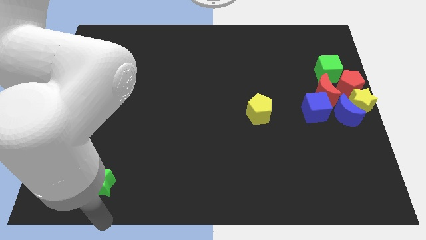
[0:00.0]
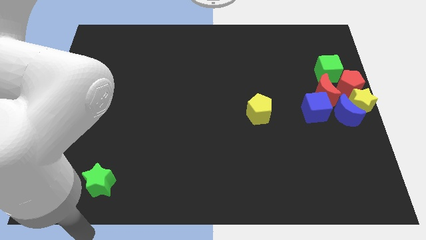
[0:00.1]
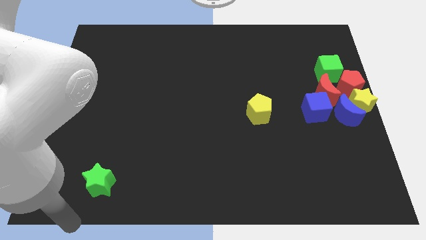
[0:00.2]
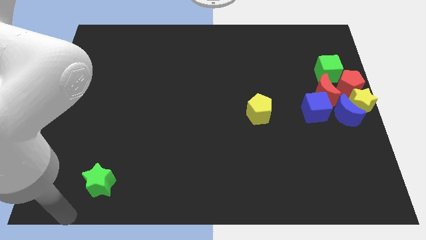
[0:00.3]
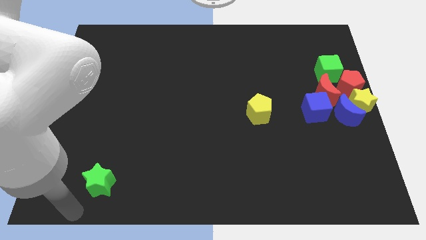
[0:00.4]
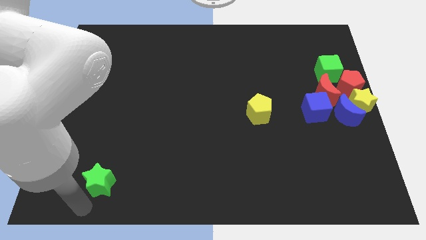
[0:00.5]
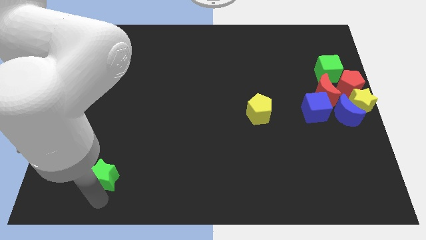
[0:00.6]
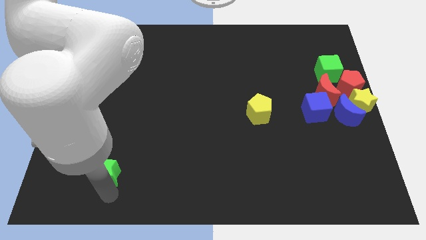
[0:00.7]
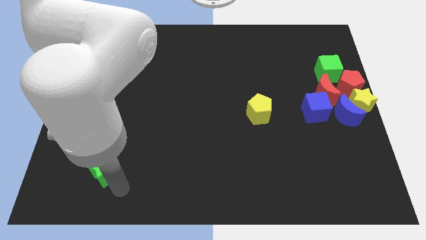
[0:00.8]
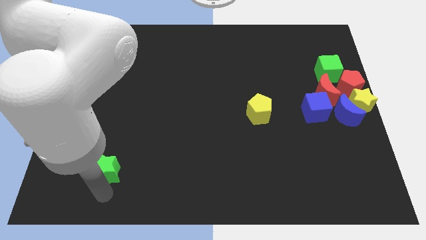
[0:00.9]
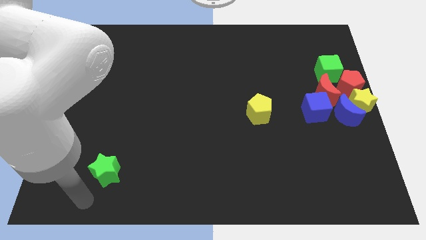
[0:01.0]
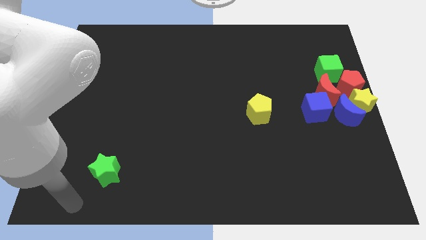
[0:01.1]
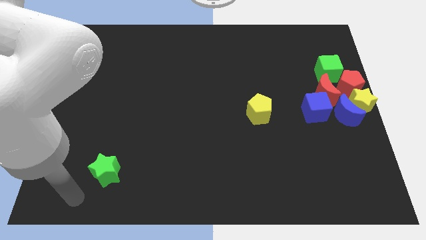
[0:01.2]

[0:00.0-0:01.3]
move green star slightly up

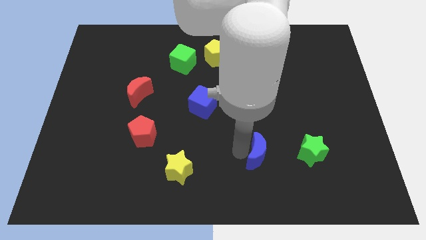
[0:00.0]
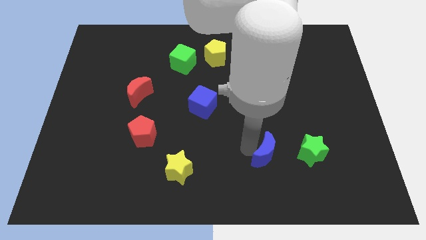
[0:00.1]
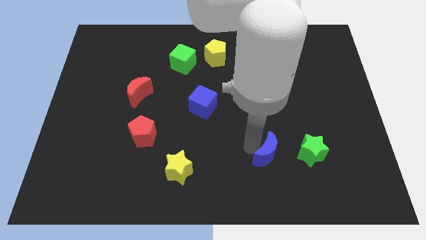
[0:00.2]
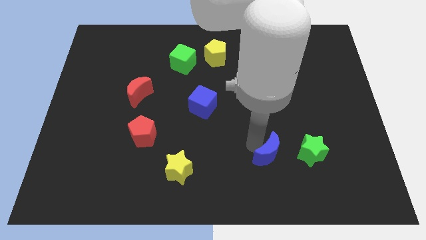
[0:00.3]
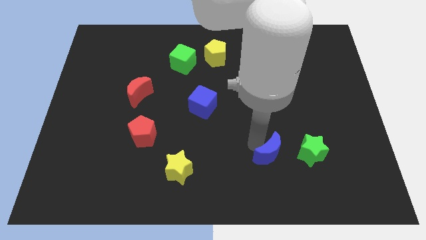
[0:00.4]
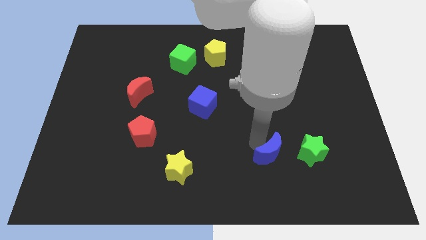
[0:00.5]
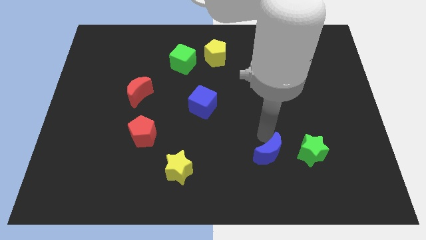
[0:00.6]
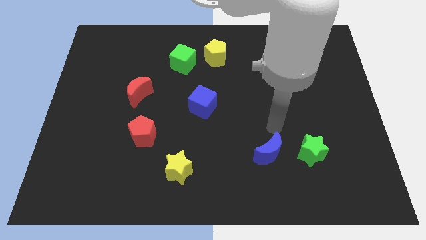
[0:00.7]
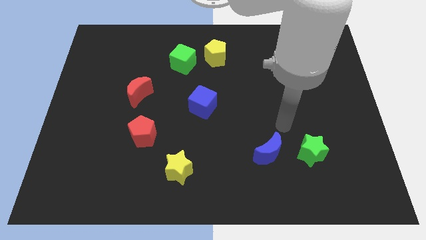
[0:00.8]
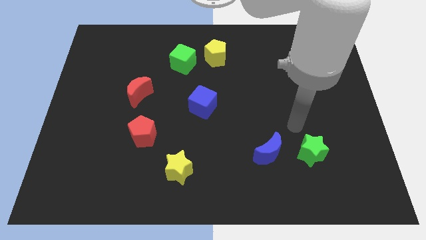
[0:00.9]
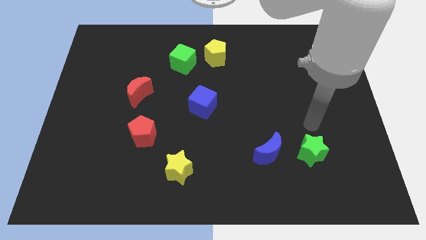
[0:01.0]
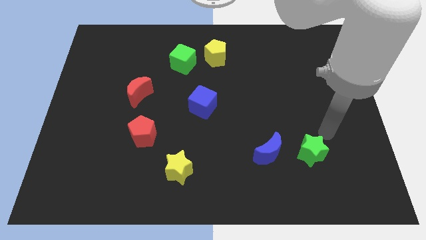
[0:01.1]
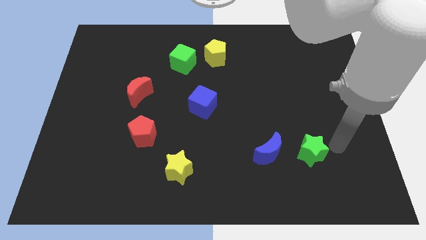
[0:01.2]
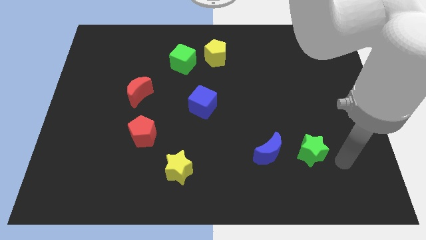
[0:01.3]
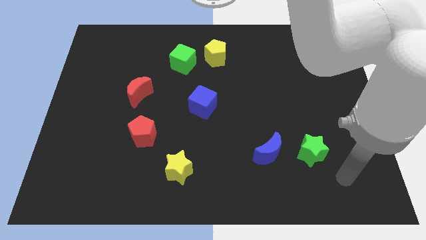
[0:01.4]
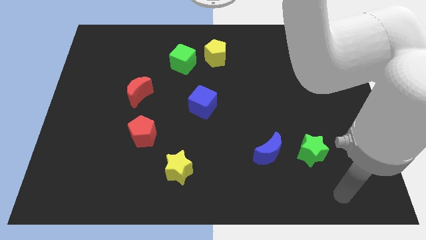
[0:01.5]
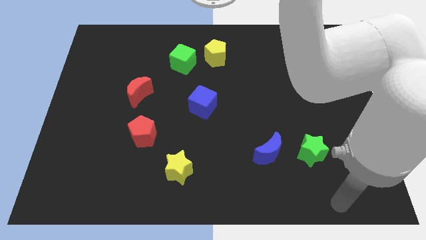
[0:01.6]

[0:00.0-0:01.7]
place the blue crescent towards the left side of the green star

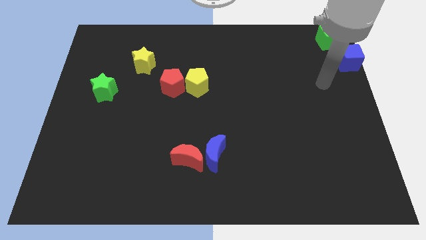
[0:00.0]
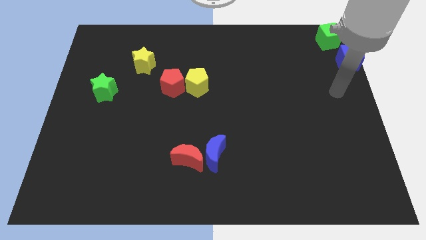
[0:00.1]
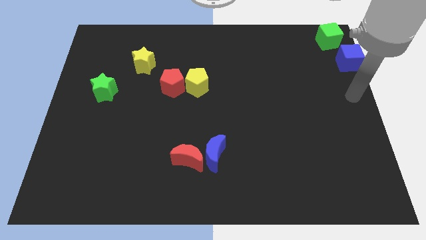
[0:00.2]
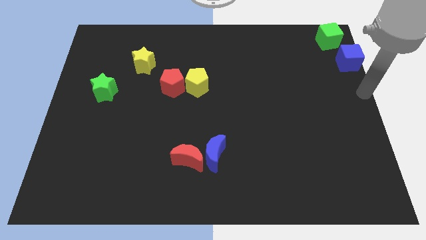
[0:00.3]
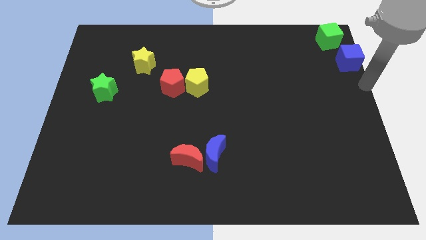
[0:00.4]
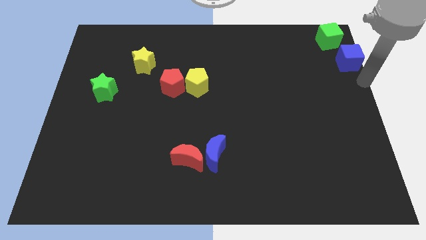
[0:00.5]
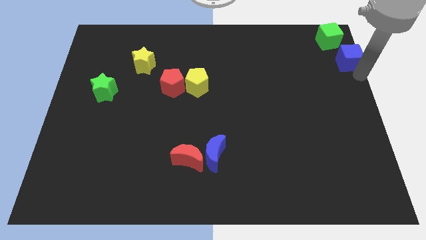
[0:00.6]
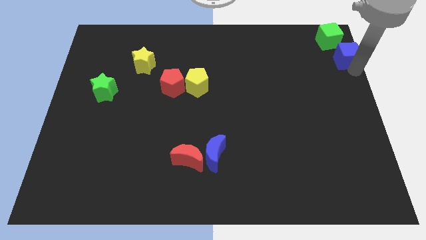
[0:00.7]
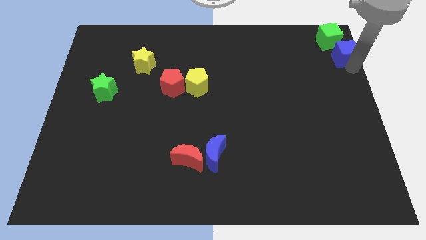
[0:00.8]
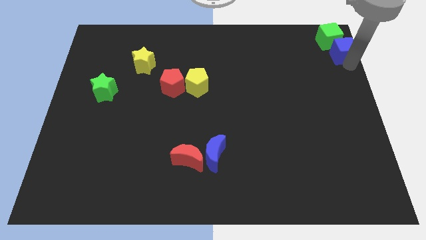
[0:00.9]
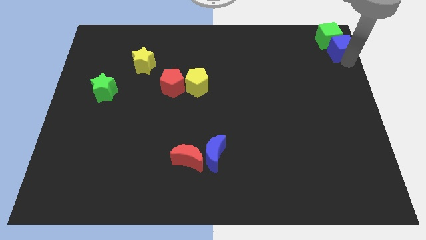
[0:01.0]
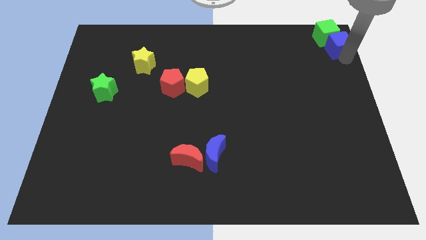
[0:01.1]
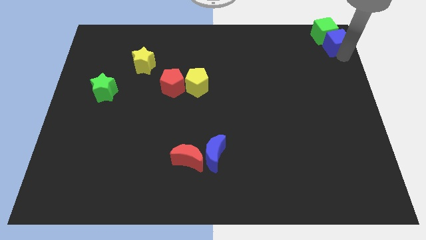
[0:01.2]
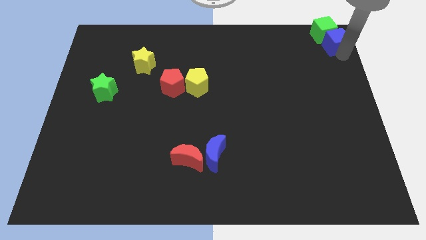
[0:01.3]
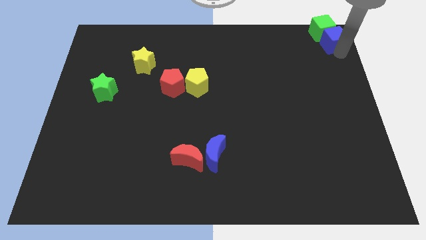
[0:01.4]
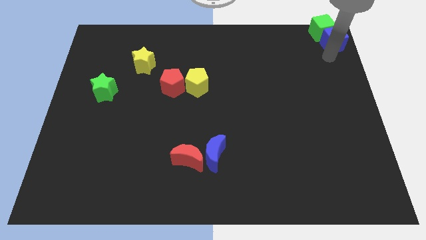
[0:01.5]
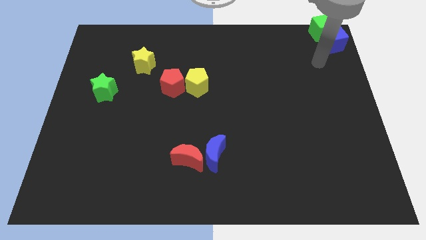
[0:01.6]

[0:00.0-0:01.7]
push the blue cube into the green cube

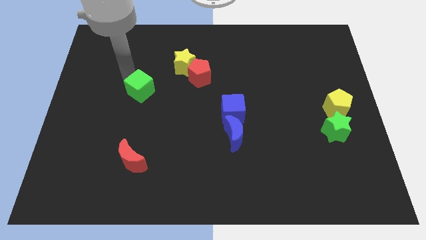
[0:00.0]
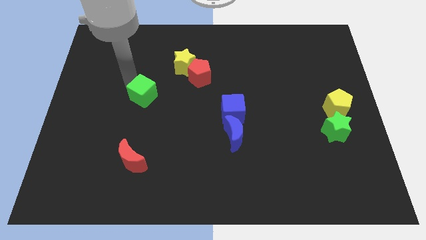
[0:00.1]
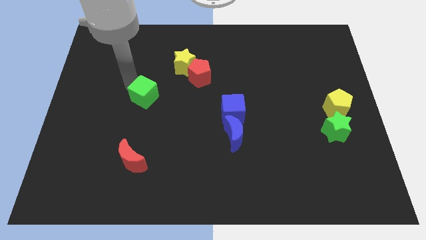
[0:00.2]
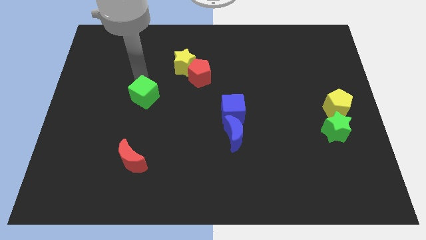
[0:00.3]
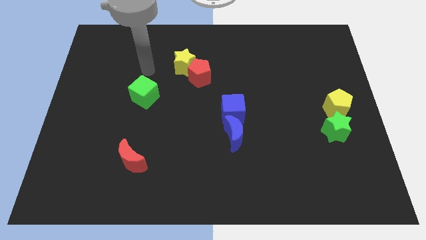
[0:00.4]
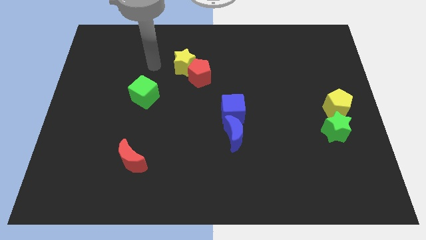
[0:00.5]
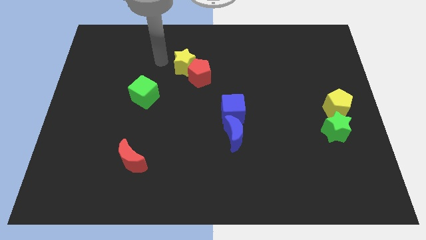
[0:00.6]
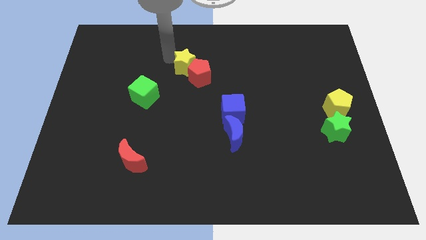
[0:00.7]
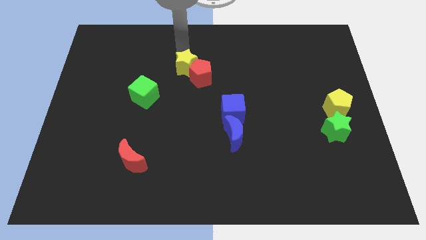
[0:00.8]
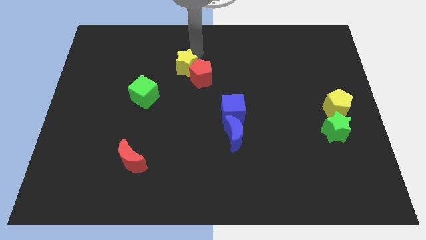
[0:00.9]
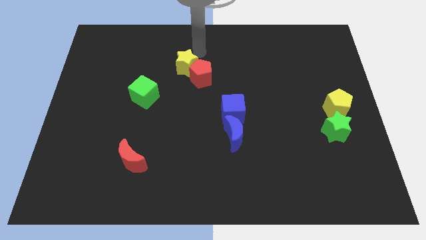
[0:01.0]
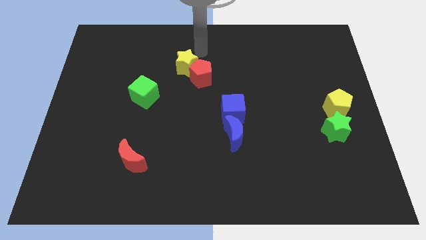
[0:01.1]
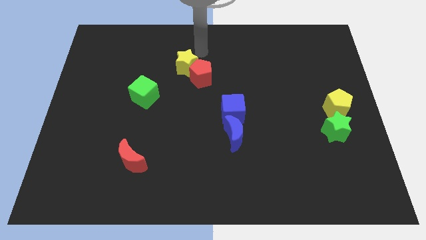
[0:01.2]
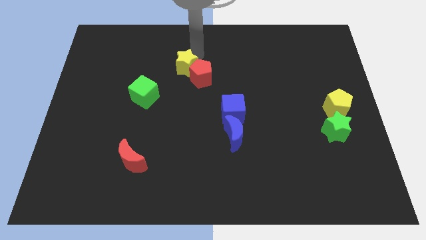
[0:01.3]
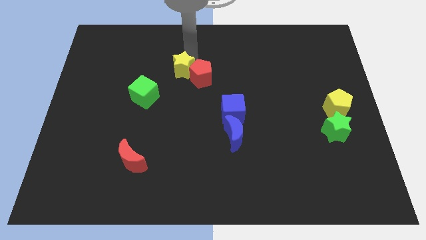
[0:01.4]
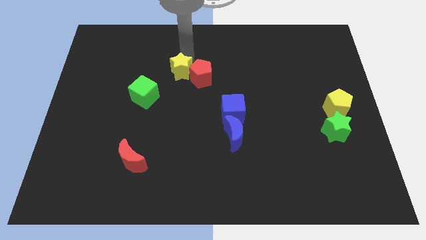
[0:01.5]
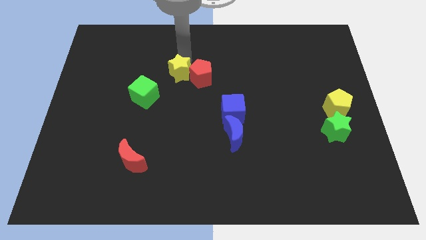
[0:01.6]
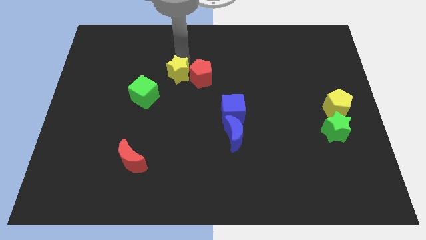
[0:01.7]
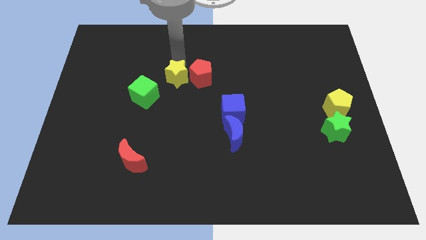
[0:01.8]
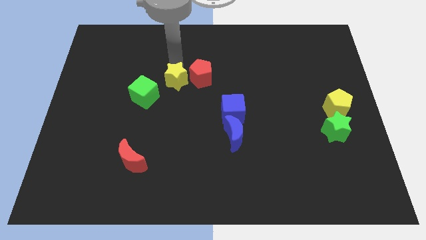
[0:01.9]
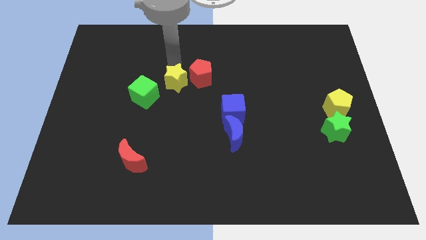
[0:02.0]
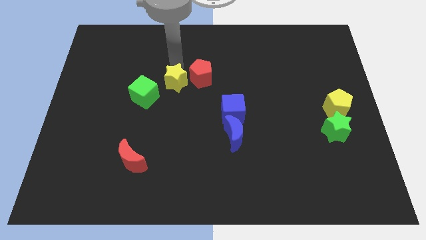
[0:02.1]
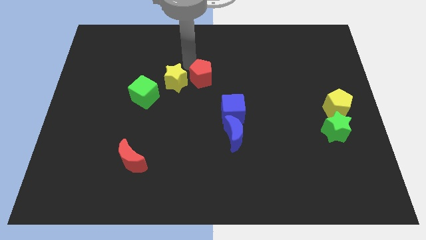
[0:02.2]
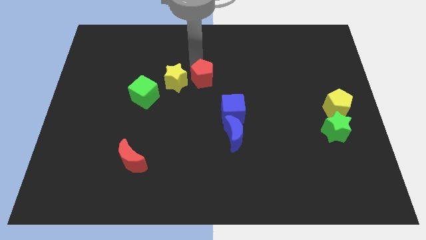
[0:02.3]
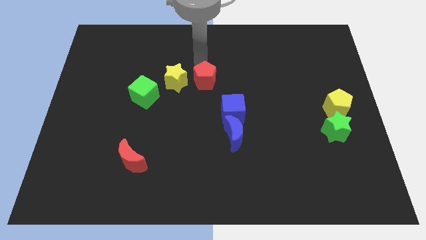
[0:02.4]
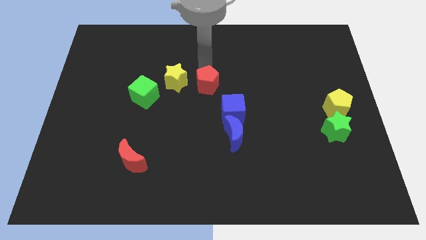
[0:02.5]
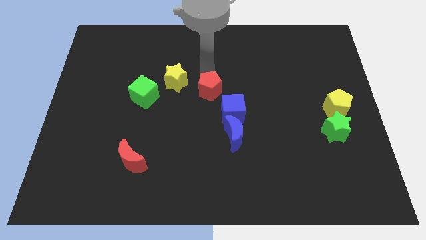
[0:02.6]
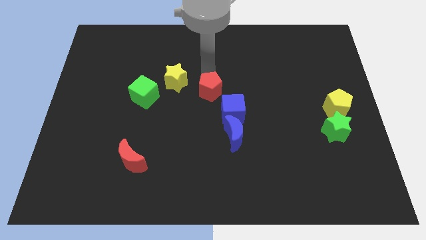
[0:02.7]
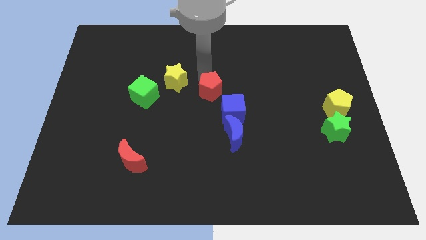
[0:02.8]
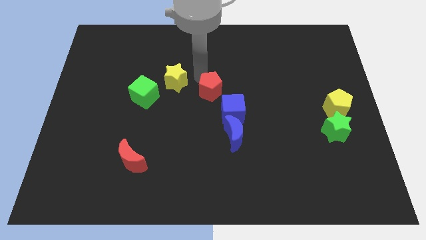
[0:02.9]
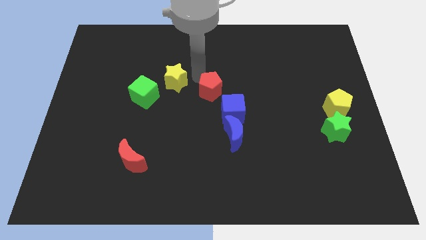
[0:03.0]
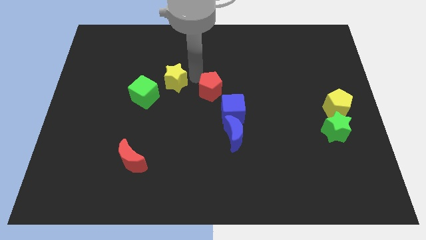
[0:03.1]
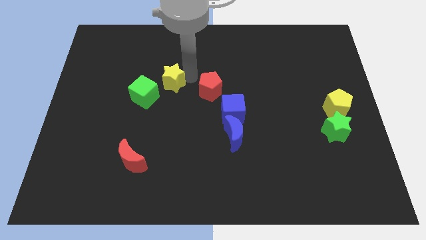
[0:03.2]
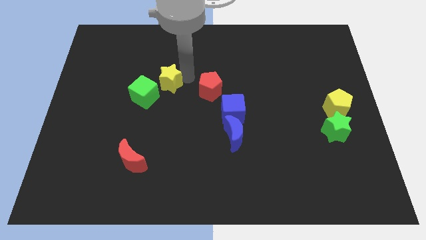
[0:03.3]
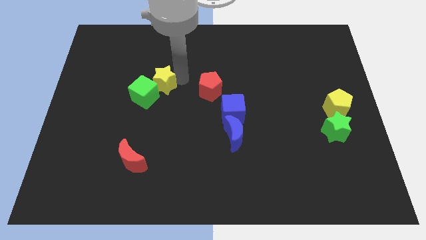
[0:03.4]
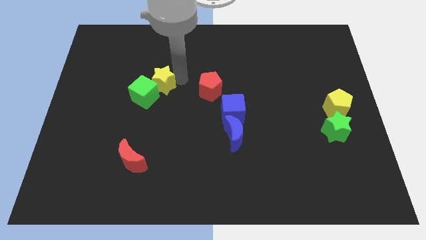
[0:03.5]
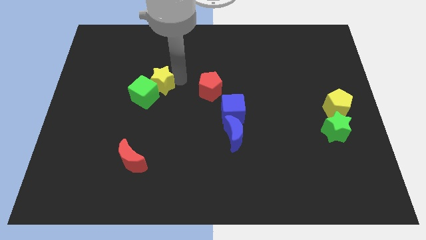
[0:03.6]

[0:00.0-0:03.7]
push yellow star towards the green cube

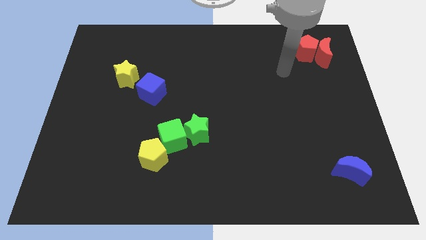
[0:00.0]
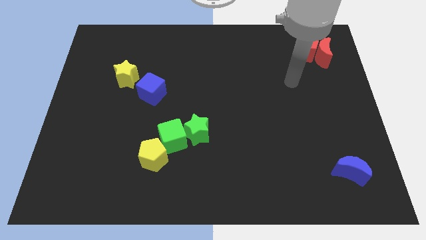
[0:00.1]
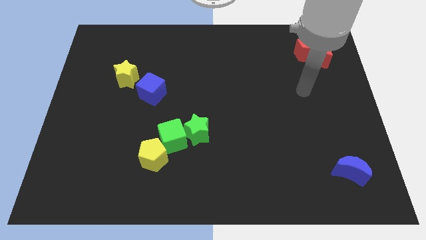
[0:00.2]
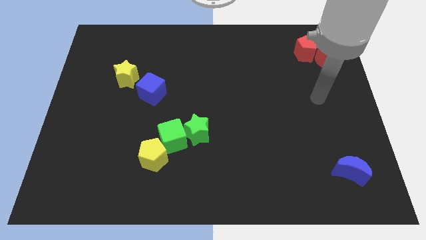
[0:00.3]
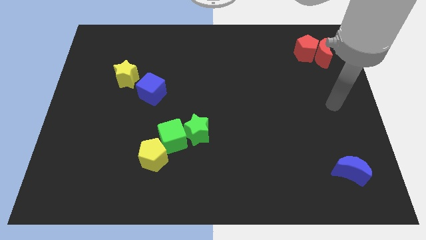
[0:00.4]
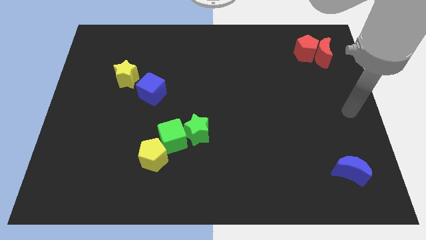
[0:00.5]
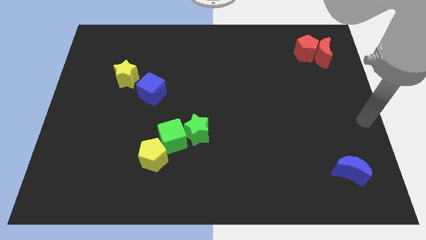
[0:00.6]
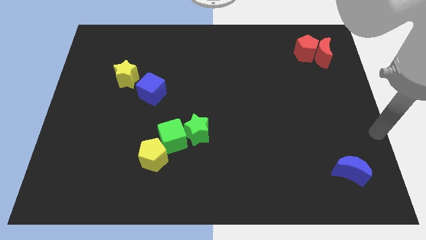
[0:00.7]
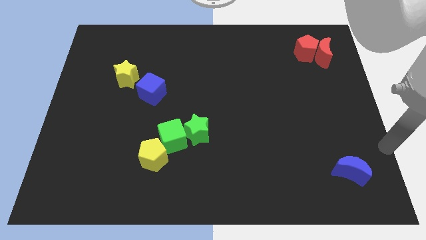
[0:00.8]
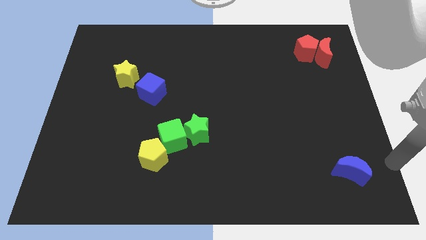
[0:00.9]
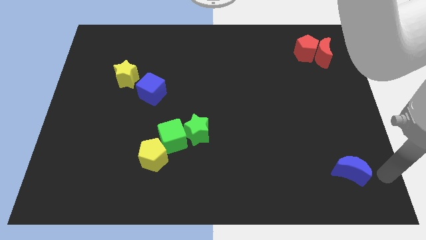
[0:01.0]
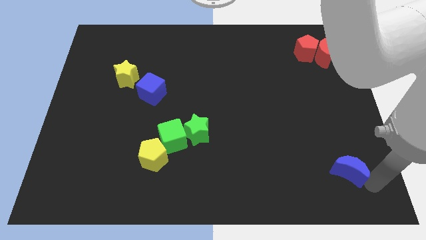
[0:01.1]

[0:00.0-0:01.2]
move the arm towards the bottom of the board
